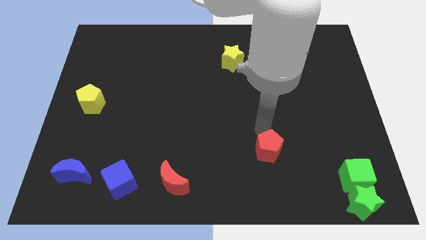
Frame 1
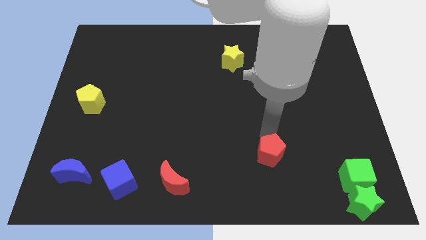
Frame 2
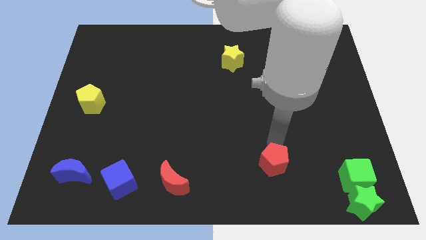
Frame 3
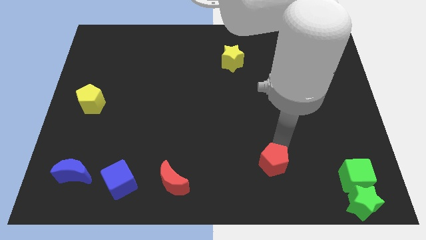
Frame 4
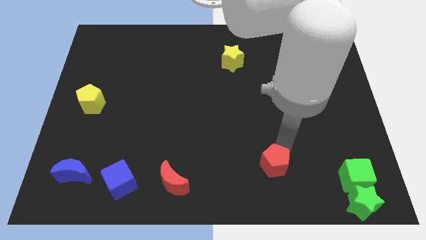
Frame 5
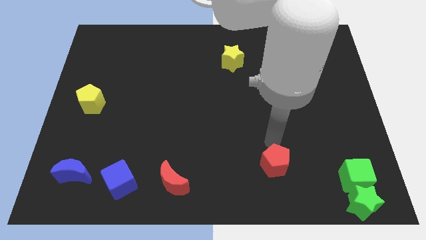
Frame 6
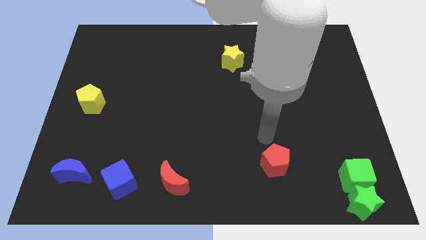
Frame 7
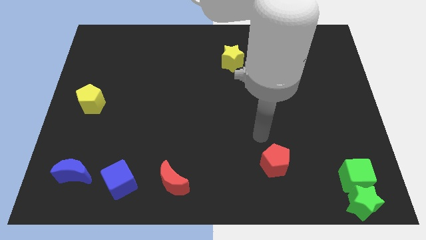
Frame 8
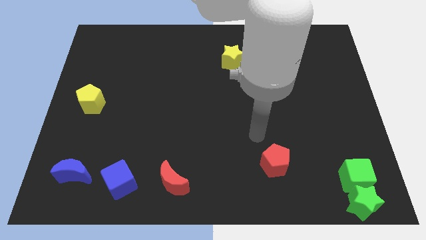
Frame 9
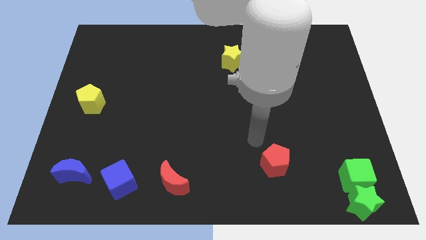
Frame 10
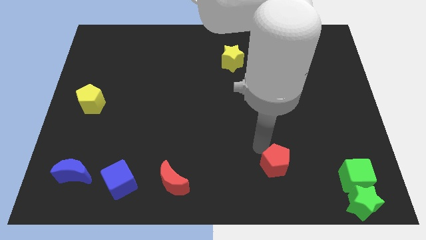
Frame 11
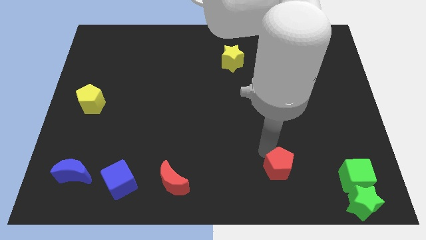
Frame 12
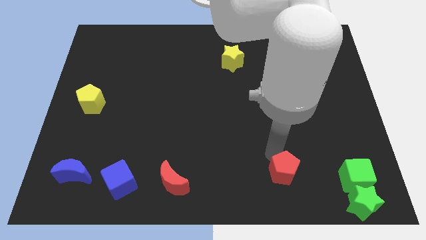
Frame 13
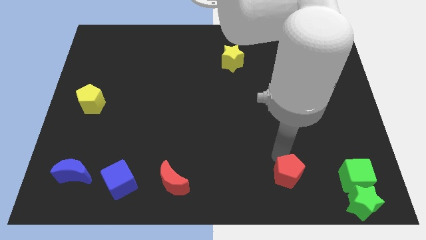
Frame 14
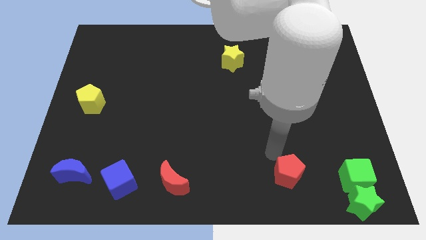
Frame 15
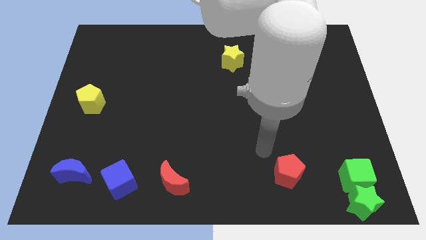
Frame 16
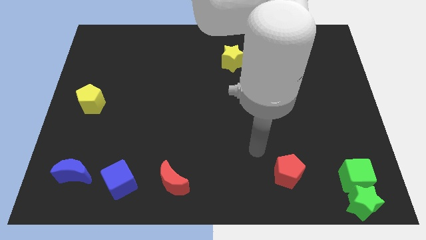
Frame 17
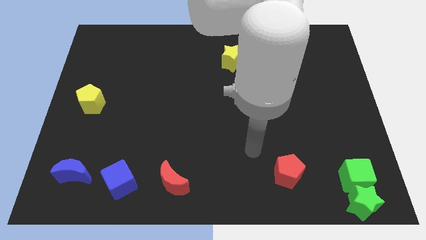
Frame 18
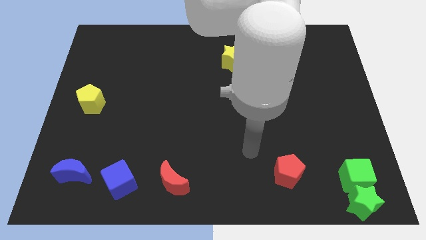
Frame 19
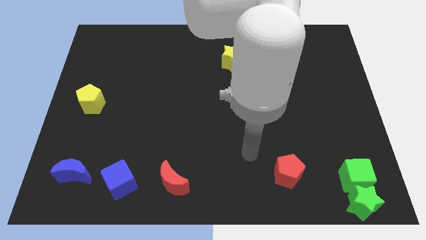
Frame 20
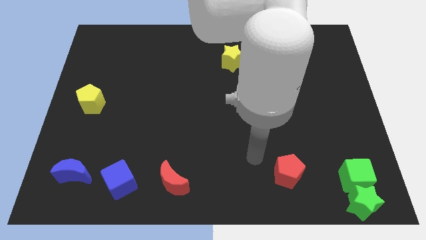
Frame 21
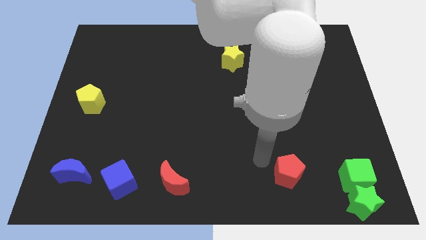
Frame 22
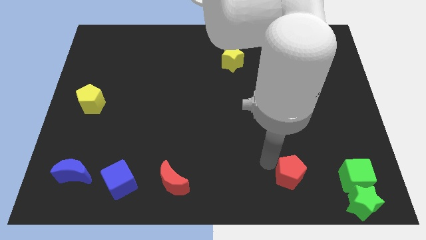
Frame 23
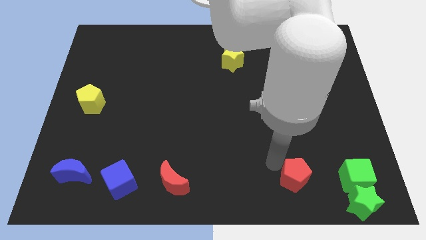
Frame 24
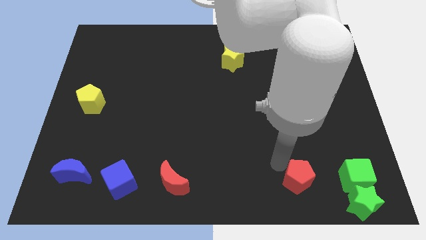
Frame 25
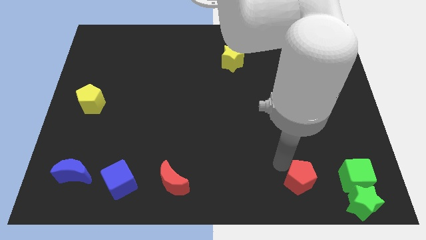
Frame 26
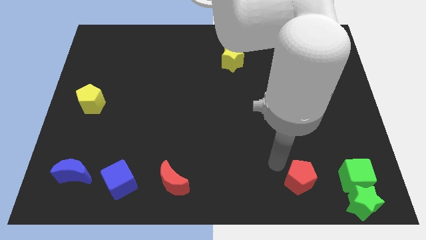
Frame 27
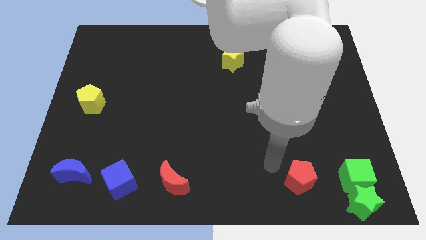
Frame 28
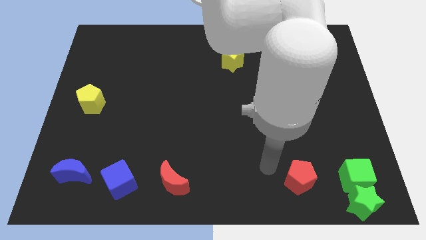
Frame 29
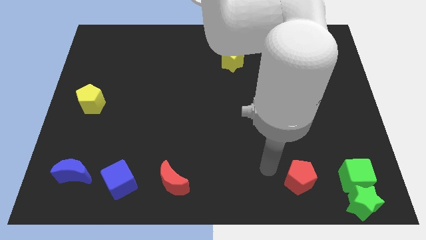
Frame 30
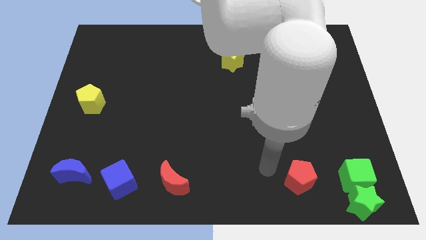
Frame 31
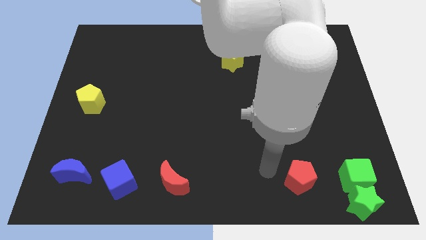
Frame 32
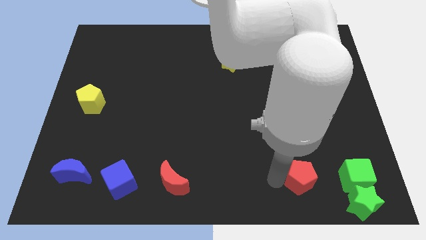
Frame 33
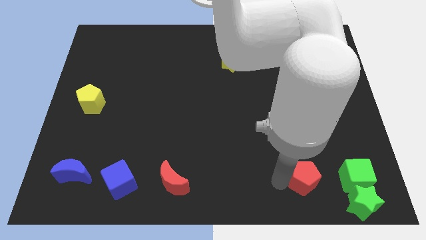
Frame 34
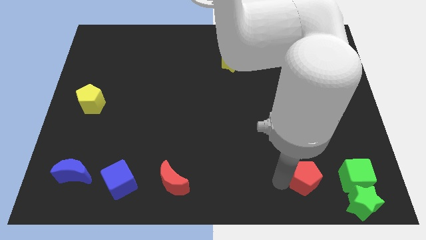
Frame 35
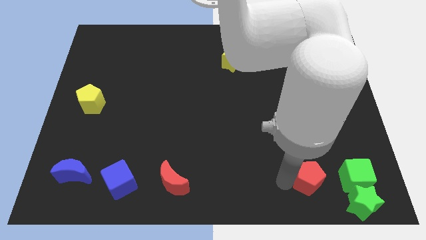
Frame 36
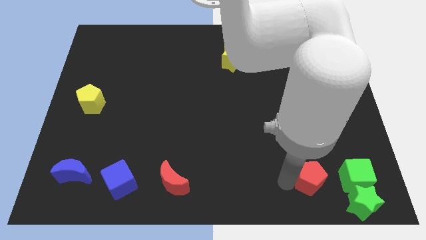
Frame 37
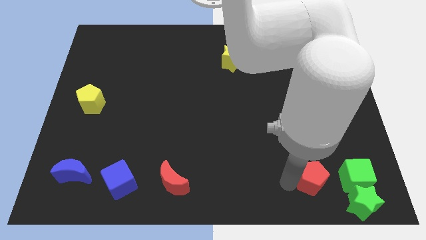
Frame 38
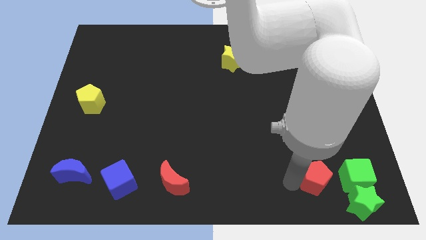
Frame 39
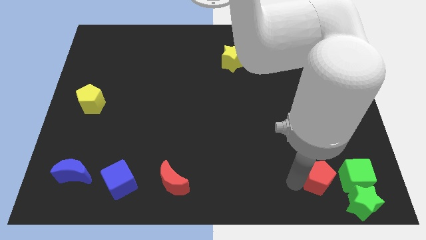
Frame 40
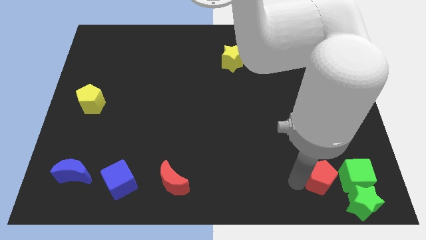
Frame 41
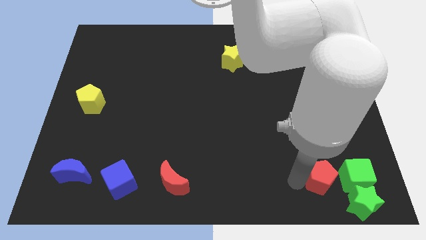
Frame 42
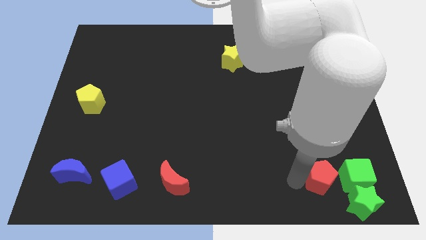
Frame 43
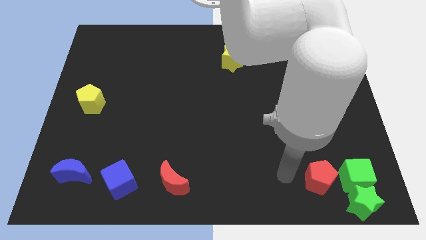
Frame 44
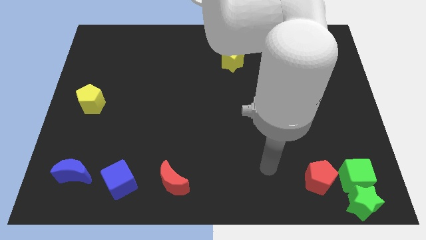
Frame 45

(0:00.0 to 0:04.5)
push the red pentagon to the left side of the green cube

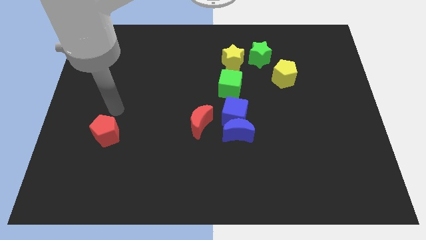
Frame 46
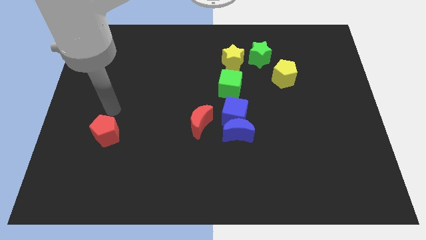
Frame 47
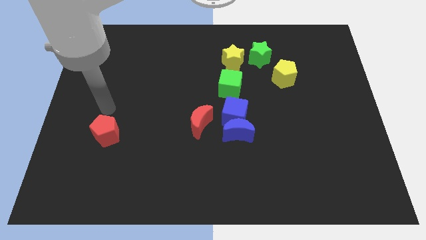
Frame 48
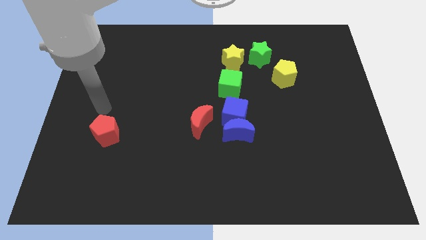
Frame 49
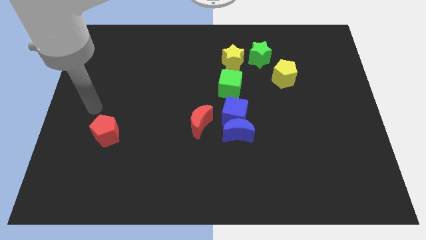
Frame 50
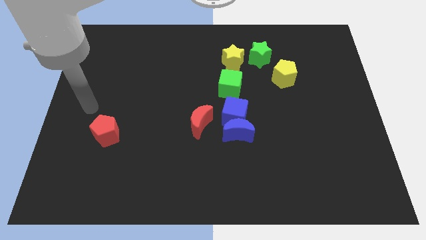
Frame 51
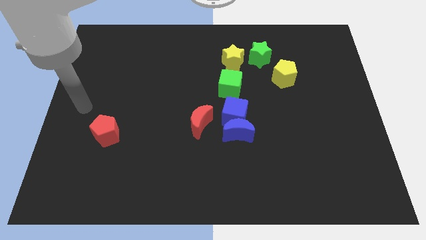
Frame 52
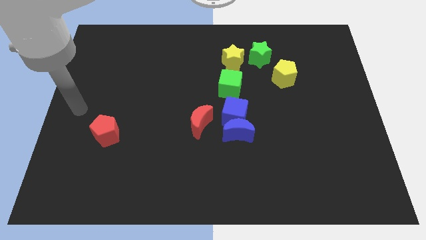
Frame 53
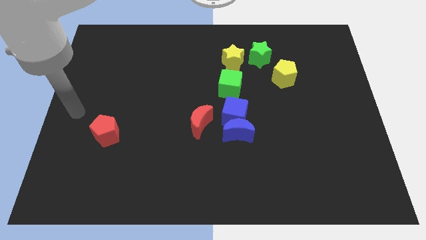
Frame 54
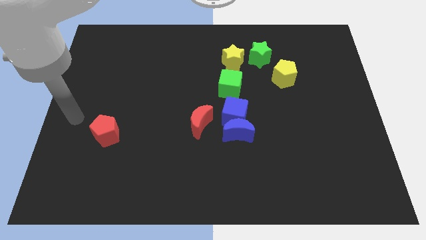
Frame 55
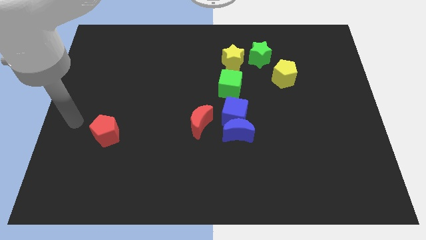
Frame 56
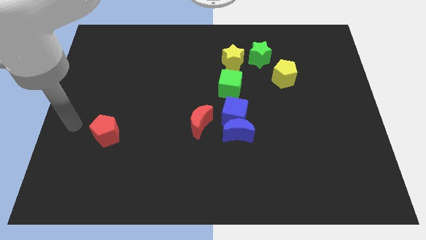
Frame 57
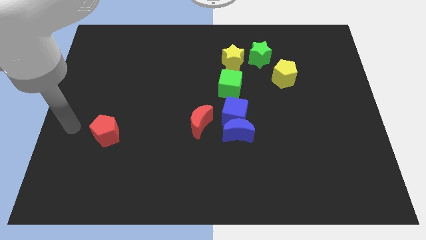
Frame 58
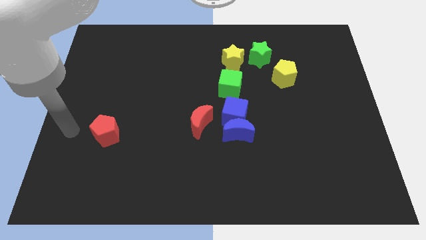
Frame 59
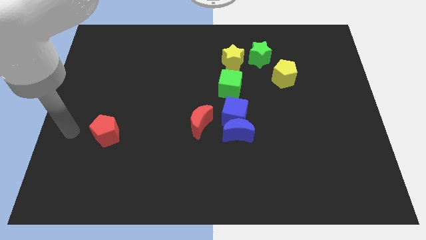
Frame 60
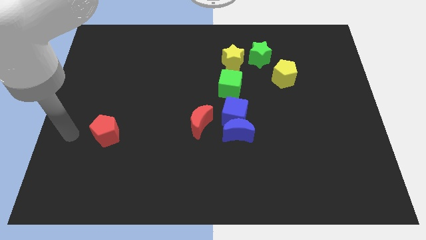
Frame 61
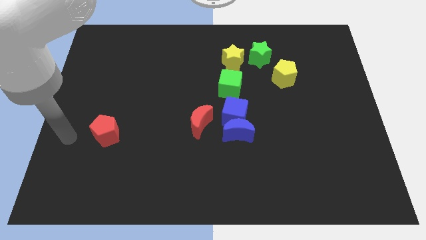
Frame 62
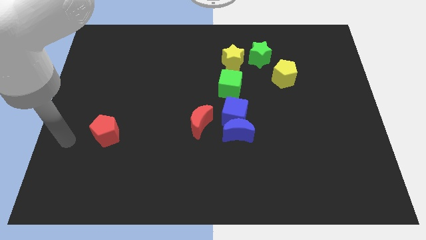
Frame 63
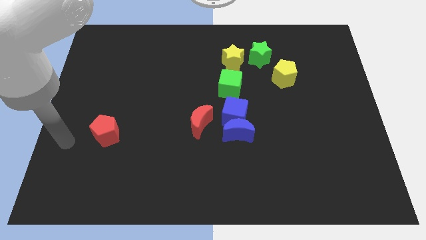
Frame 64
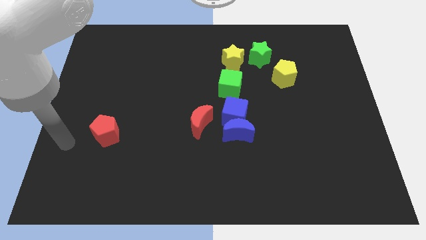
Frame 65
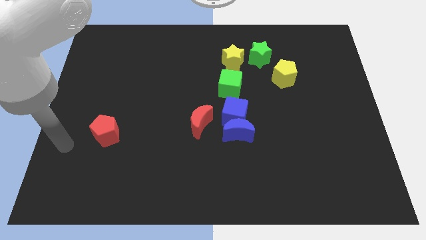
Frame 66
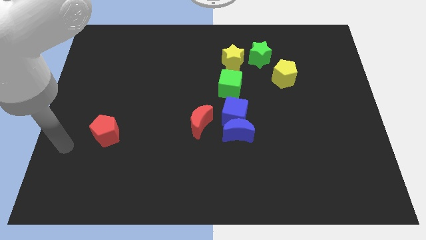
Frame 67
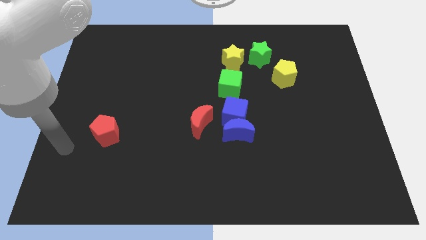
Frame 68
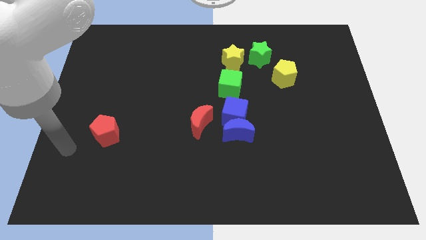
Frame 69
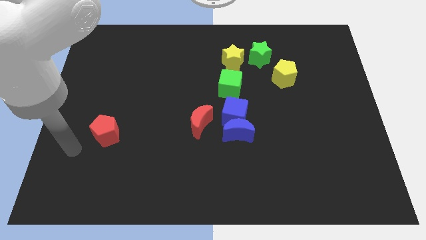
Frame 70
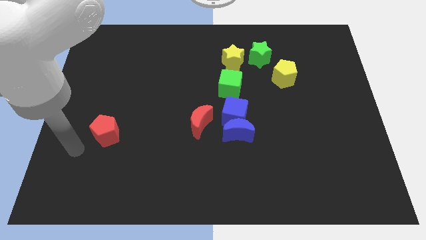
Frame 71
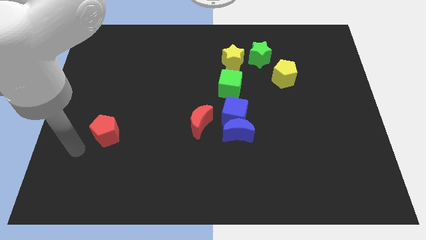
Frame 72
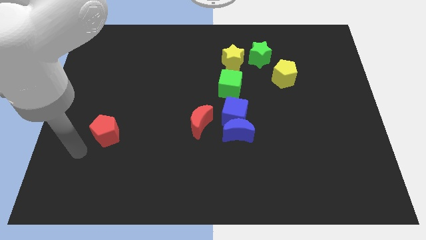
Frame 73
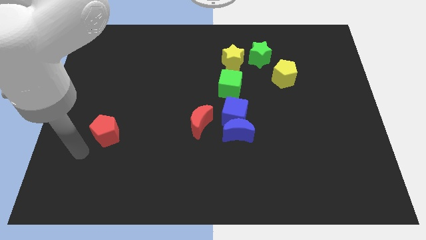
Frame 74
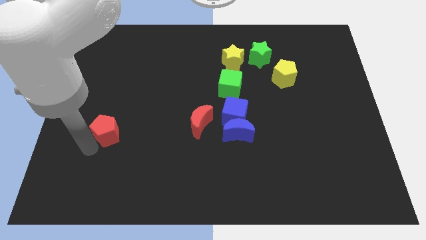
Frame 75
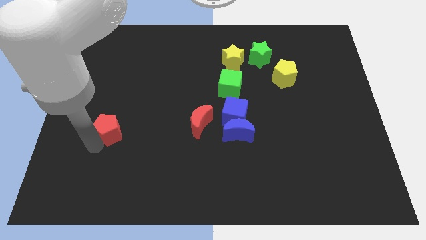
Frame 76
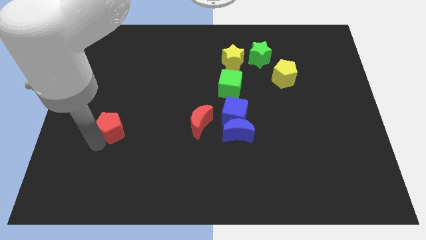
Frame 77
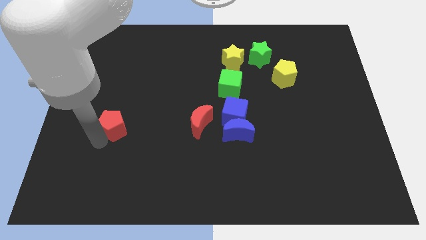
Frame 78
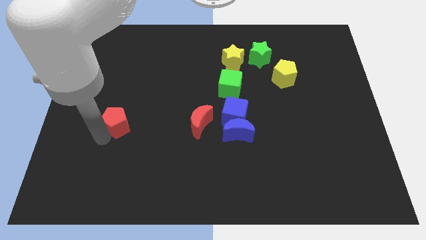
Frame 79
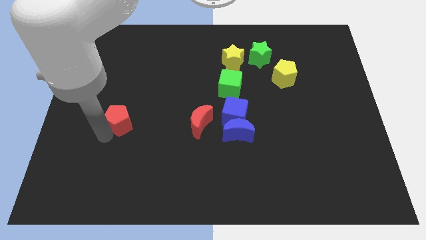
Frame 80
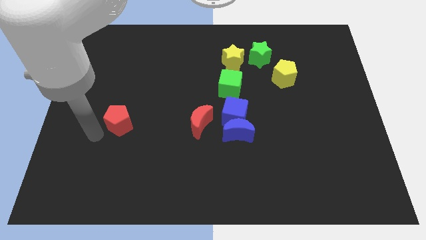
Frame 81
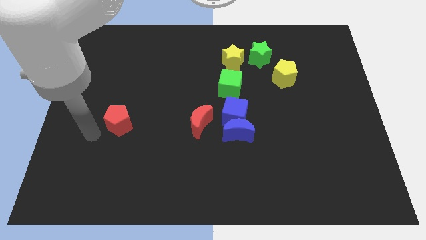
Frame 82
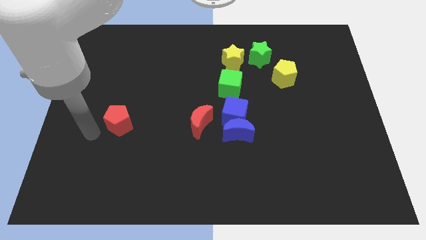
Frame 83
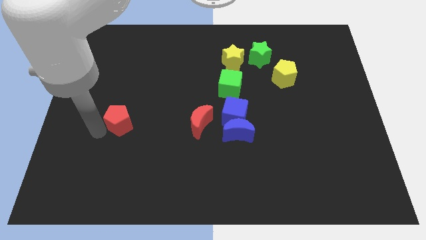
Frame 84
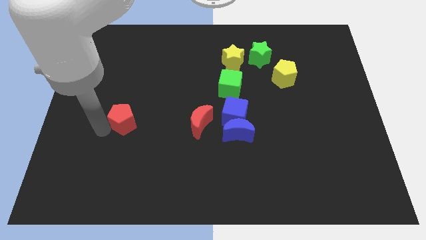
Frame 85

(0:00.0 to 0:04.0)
push the red pentagon to the left of the red crescent

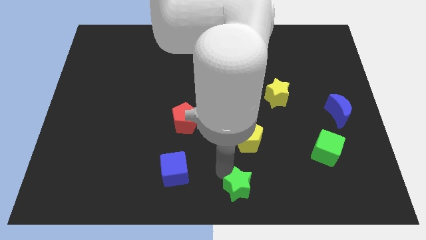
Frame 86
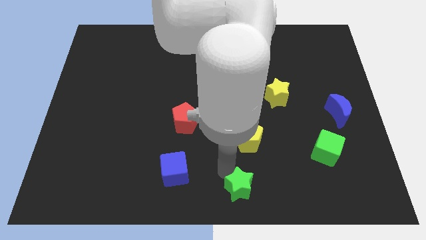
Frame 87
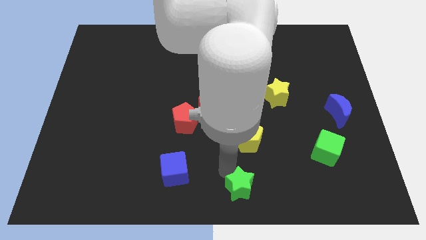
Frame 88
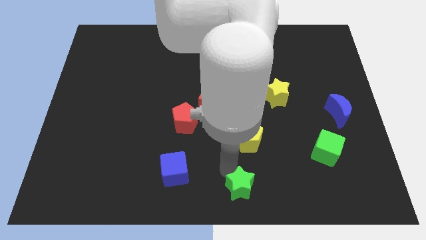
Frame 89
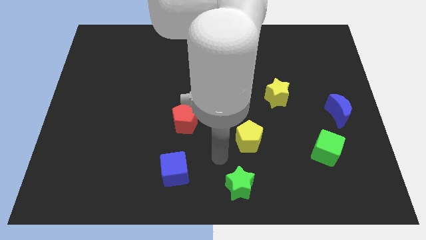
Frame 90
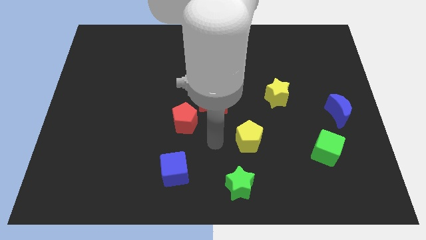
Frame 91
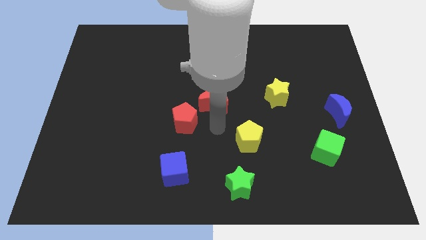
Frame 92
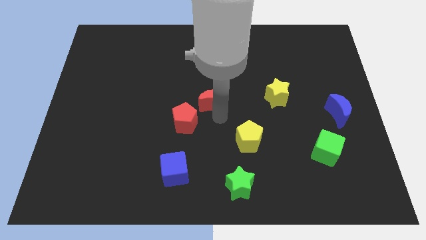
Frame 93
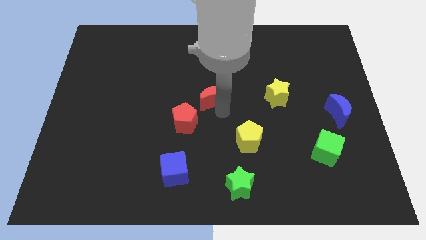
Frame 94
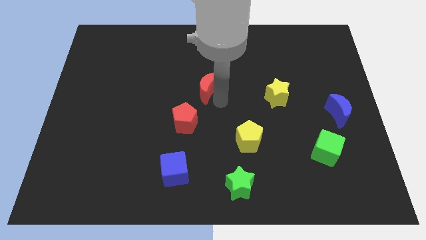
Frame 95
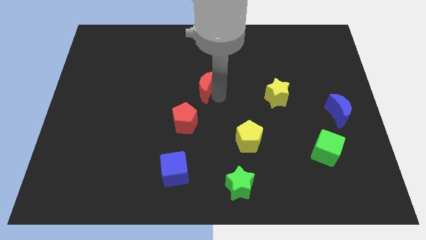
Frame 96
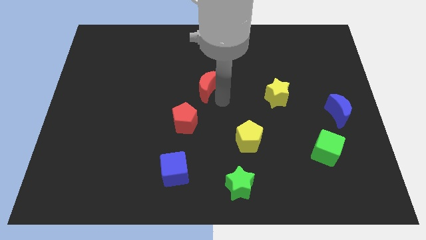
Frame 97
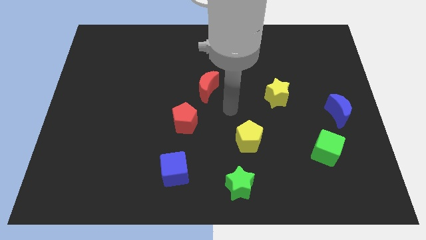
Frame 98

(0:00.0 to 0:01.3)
touch green star and go to another object
